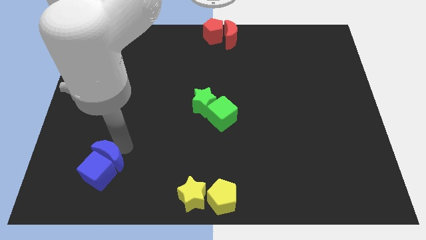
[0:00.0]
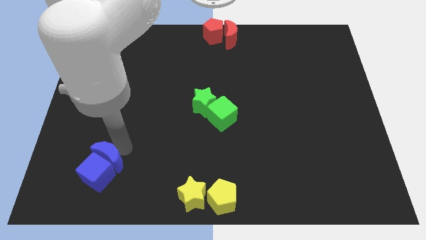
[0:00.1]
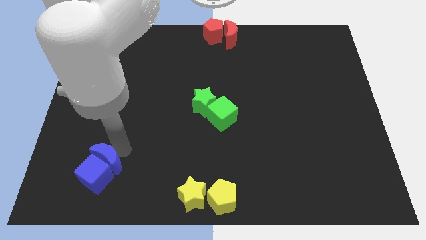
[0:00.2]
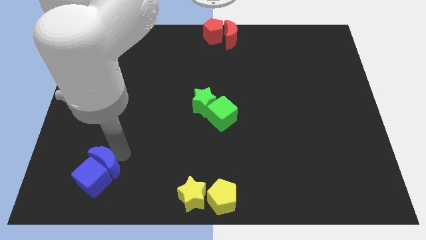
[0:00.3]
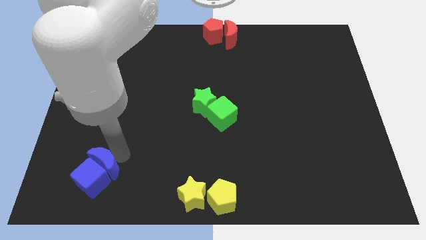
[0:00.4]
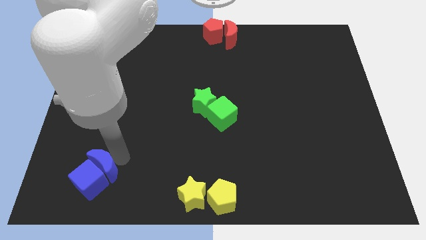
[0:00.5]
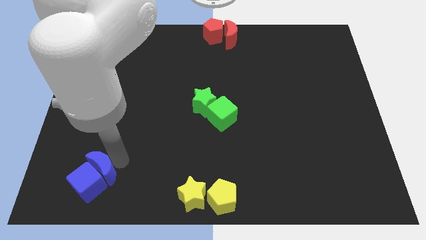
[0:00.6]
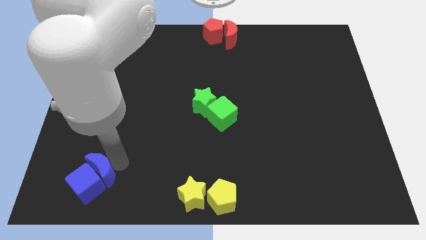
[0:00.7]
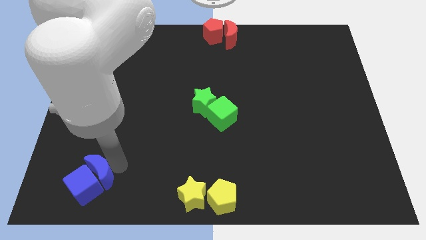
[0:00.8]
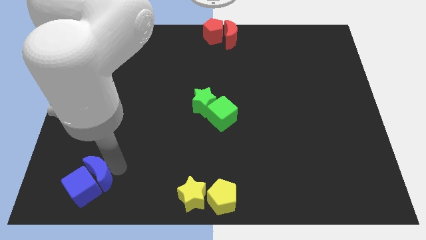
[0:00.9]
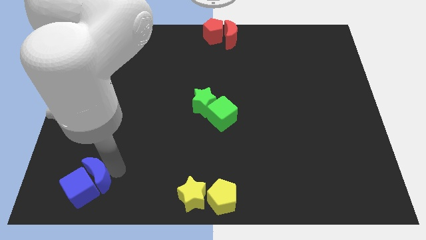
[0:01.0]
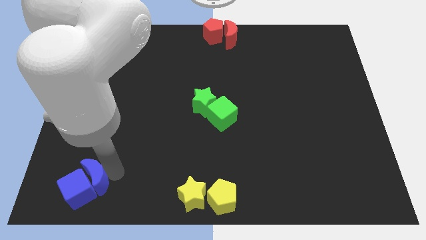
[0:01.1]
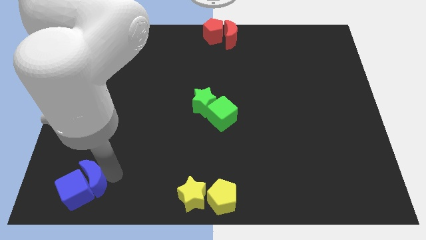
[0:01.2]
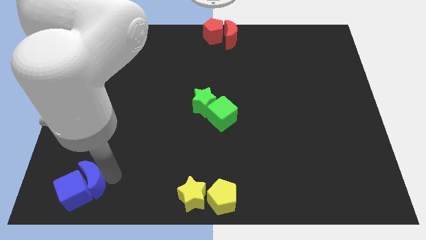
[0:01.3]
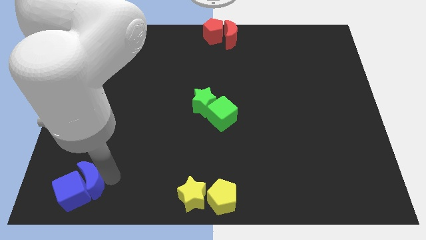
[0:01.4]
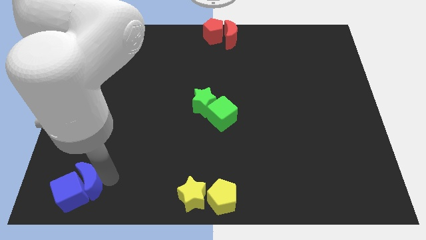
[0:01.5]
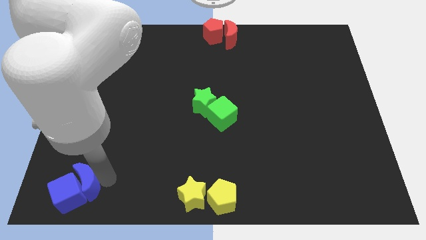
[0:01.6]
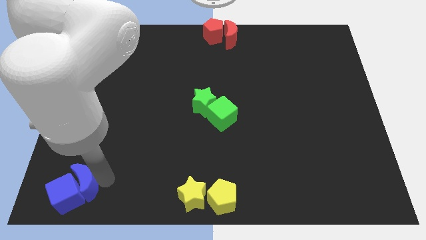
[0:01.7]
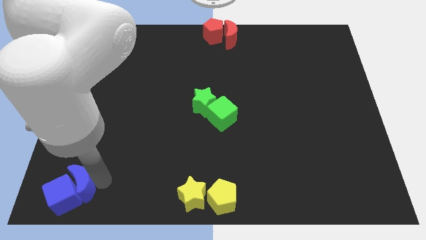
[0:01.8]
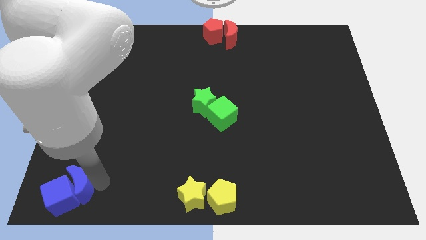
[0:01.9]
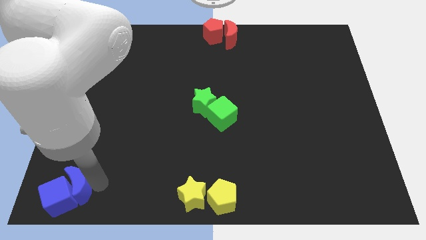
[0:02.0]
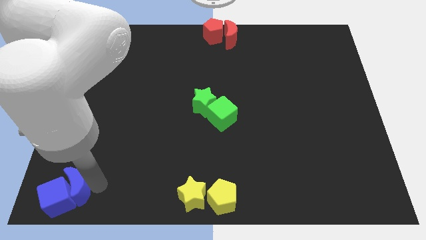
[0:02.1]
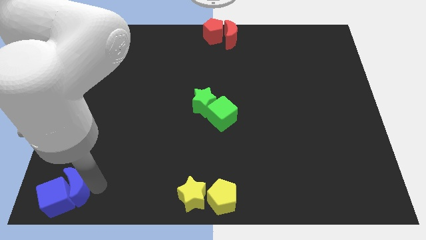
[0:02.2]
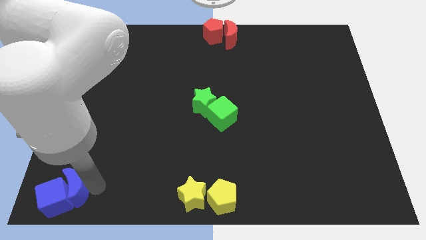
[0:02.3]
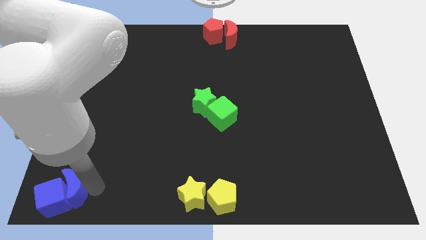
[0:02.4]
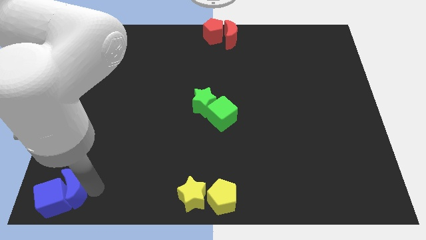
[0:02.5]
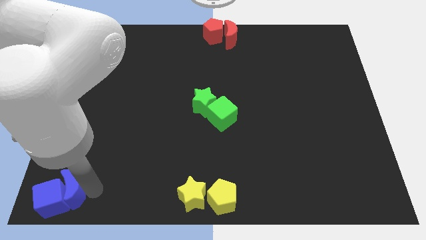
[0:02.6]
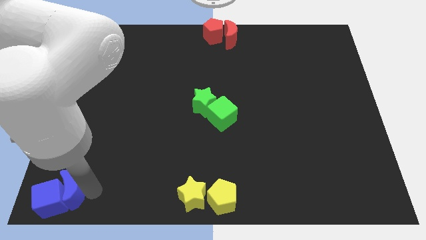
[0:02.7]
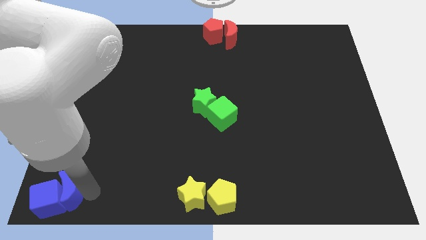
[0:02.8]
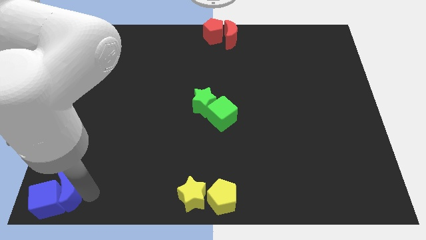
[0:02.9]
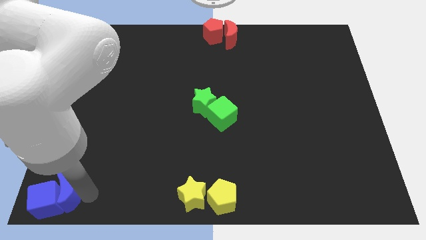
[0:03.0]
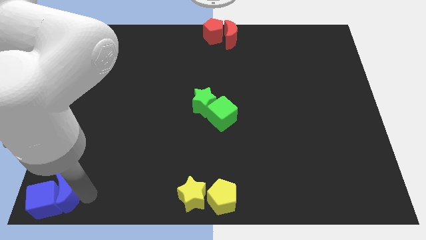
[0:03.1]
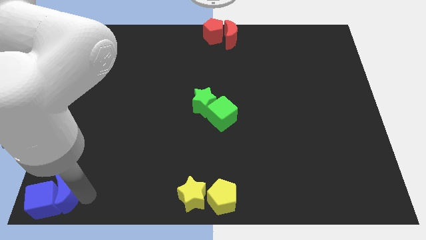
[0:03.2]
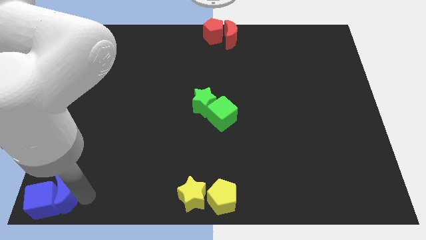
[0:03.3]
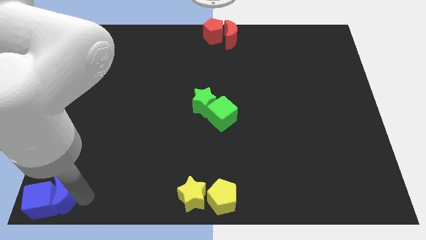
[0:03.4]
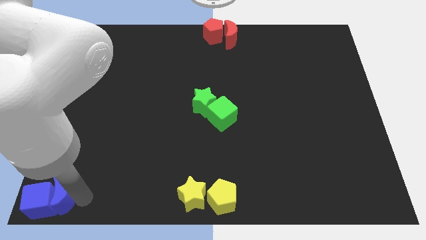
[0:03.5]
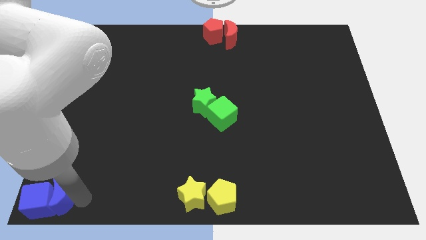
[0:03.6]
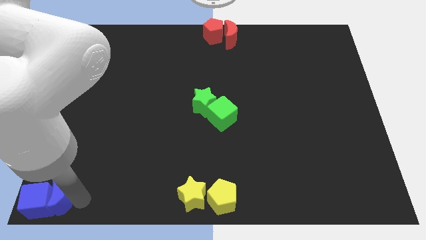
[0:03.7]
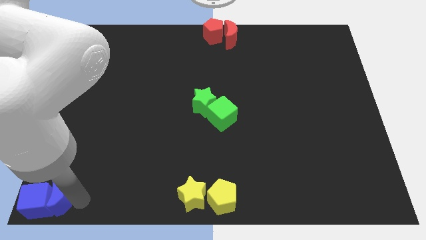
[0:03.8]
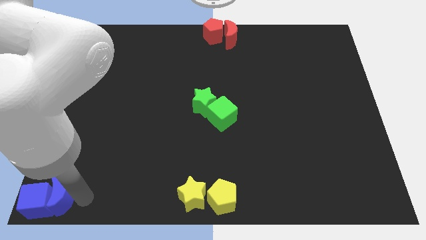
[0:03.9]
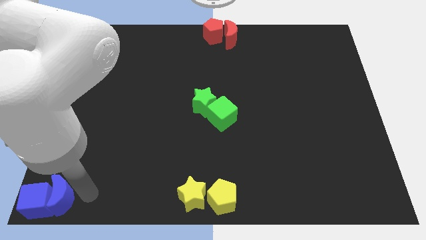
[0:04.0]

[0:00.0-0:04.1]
push the blue crescent along with the blue cube to the bottom left corner to the board

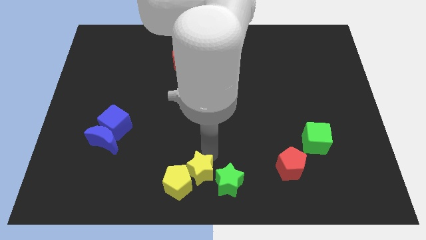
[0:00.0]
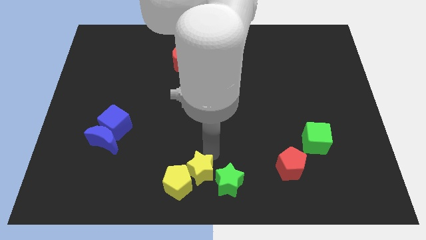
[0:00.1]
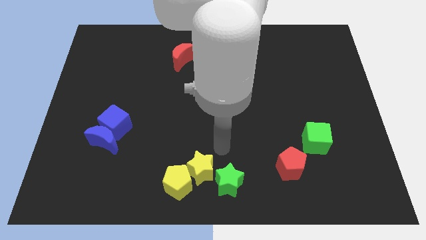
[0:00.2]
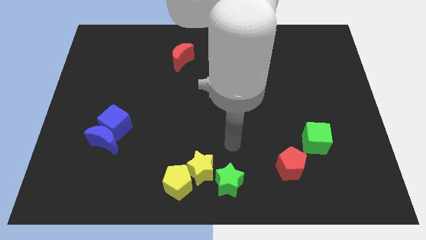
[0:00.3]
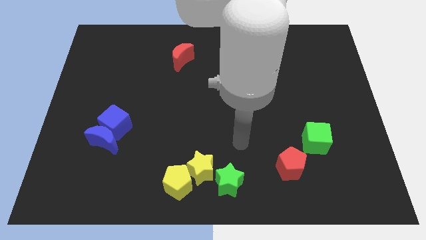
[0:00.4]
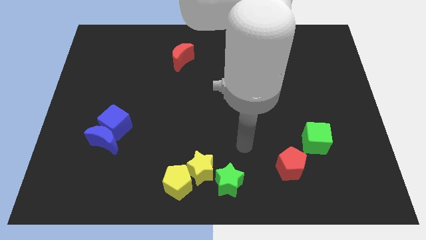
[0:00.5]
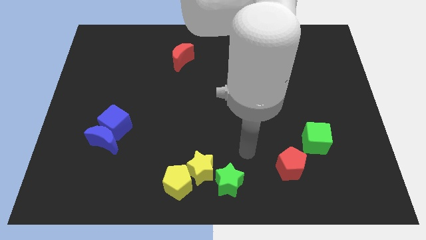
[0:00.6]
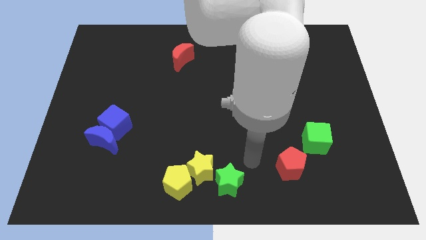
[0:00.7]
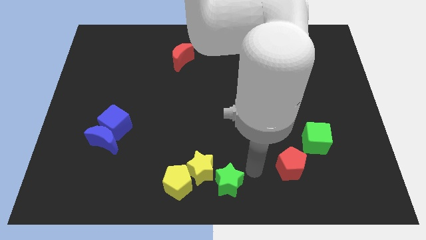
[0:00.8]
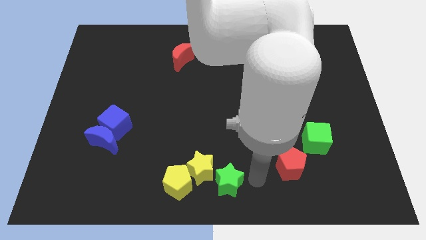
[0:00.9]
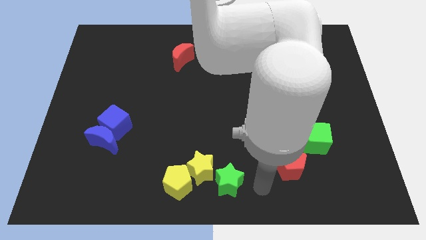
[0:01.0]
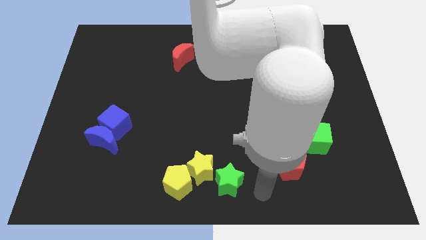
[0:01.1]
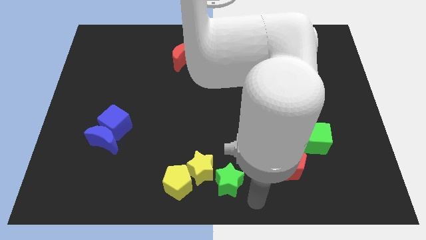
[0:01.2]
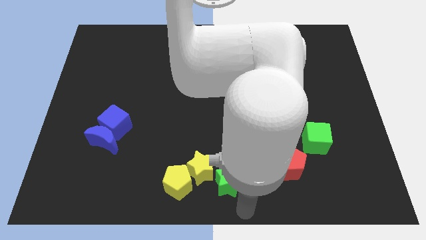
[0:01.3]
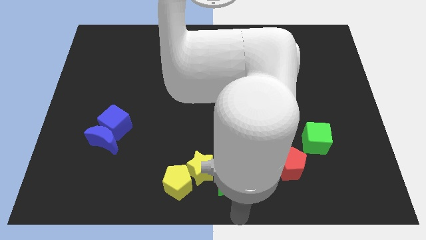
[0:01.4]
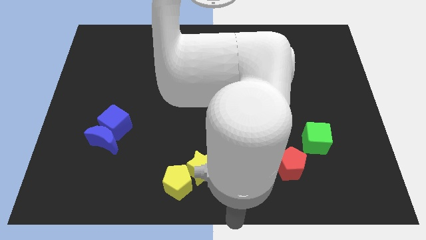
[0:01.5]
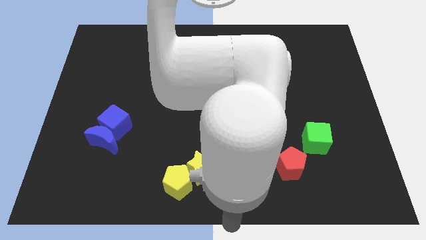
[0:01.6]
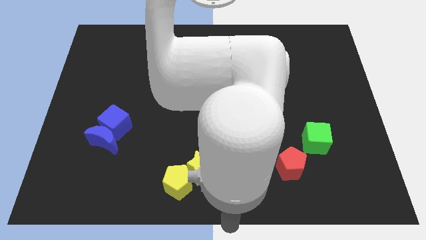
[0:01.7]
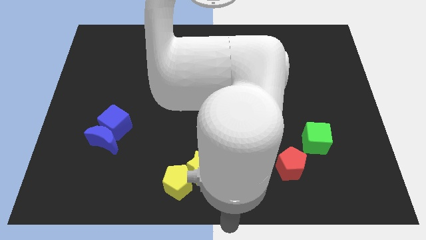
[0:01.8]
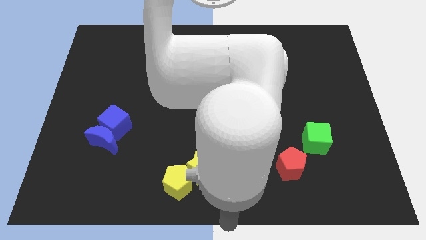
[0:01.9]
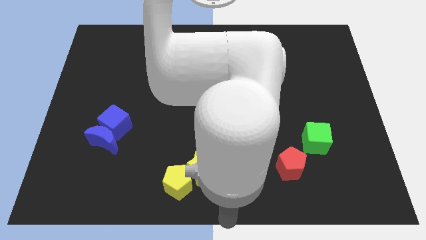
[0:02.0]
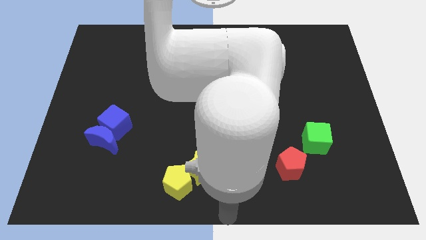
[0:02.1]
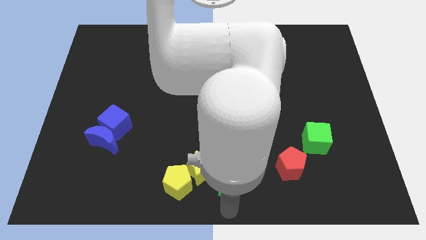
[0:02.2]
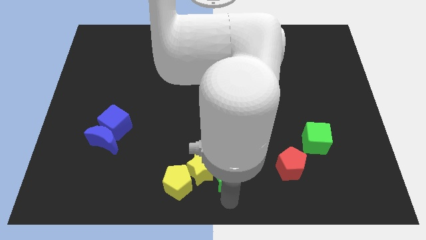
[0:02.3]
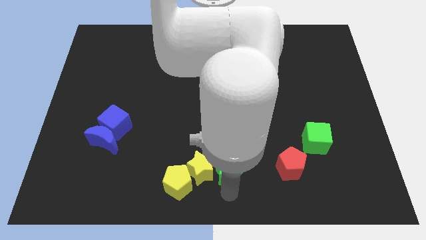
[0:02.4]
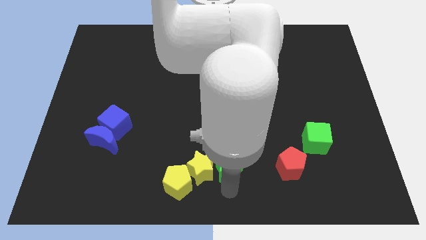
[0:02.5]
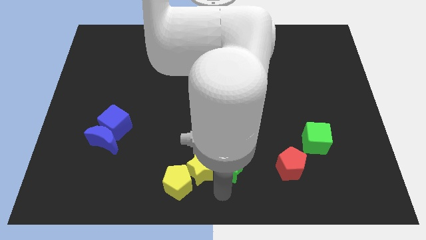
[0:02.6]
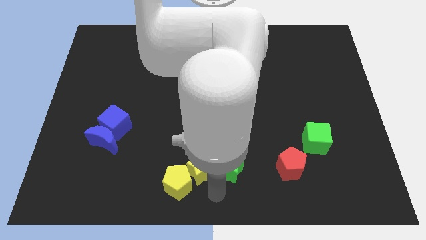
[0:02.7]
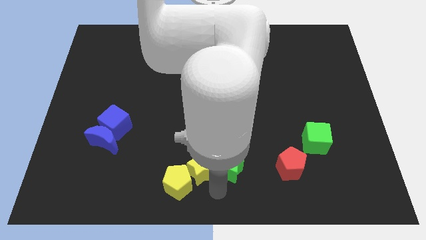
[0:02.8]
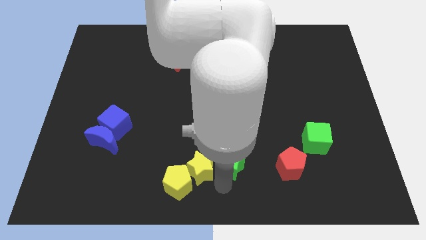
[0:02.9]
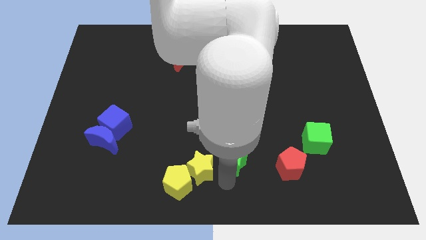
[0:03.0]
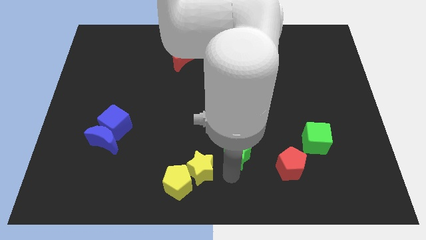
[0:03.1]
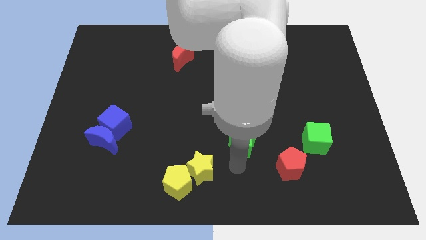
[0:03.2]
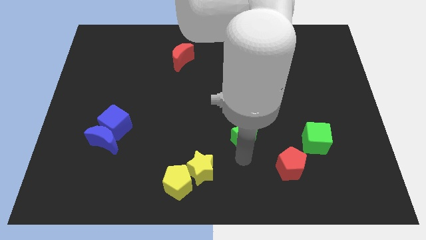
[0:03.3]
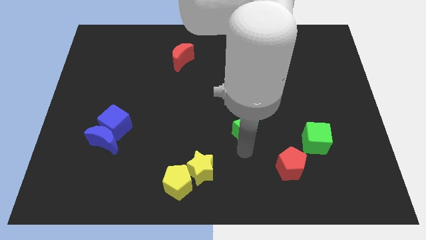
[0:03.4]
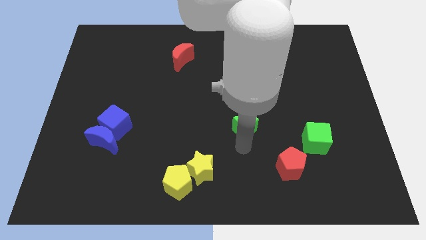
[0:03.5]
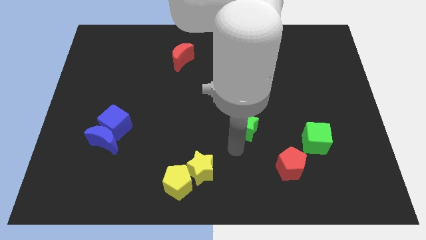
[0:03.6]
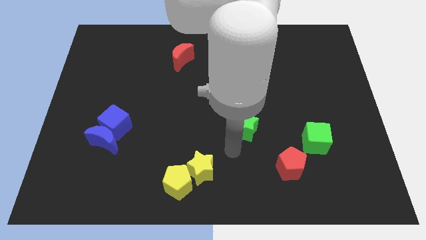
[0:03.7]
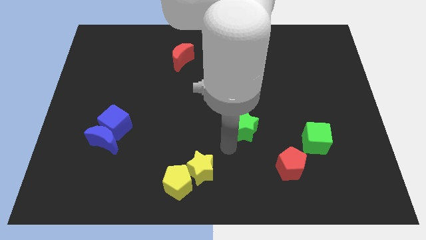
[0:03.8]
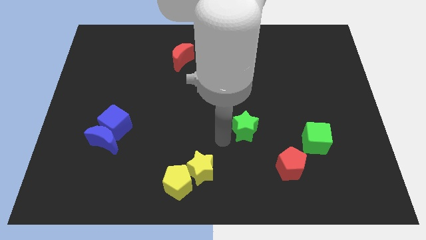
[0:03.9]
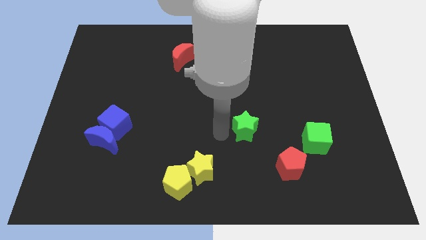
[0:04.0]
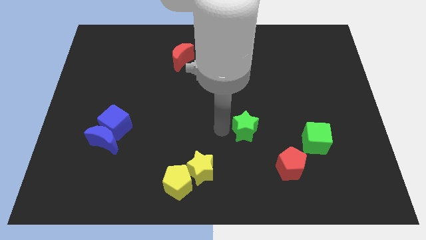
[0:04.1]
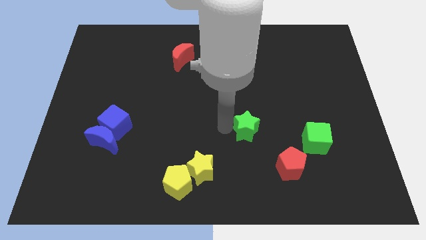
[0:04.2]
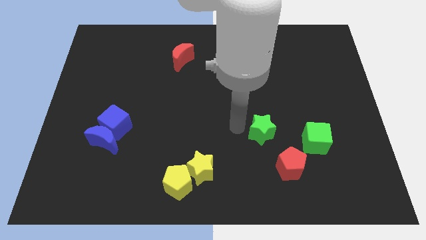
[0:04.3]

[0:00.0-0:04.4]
place the green star to the left of the green cube

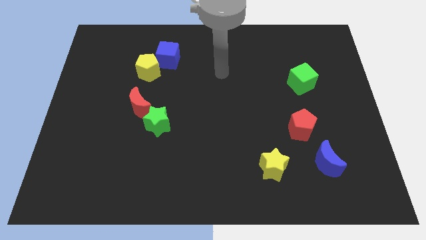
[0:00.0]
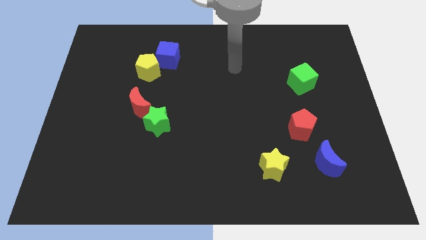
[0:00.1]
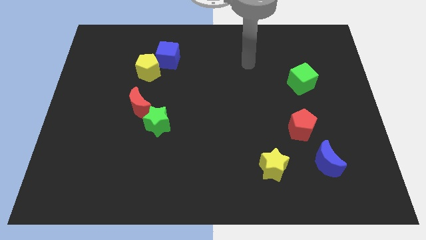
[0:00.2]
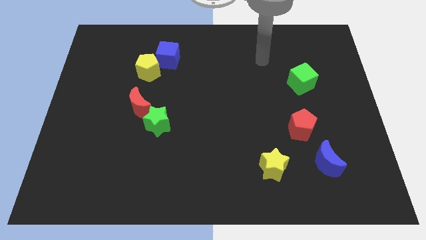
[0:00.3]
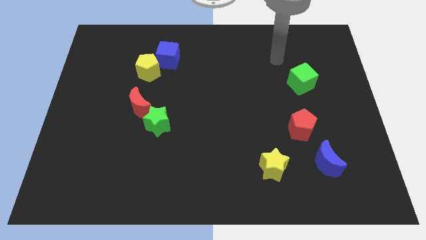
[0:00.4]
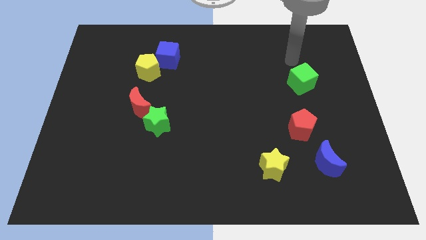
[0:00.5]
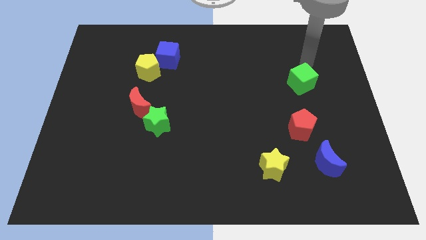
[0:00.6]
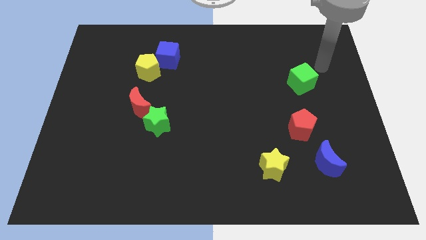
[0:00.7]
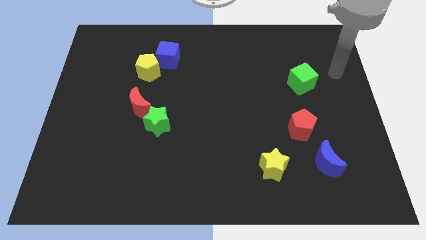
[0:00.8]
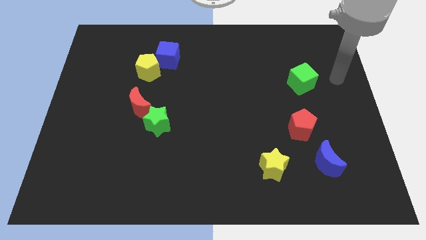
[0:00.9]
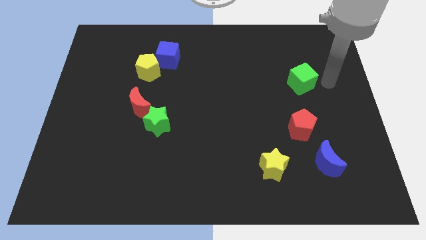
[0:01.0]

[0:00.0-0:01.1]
place your hand to the right side of the green cube
